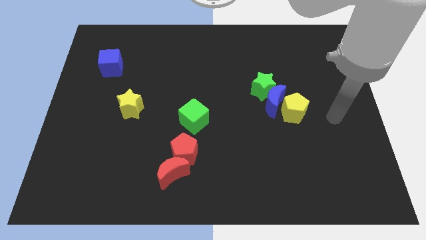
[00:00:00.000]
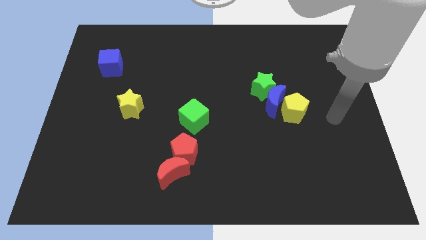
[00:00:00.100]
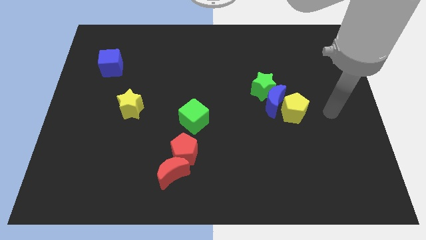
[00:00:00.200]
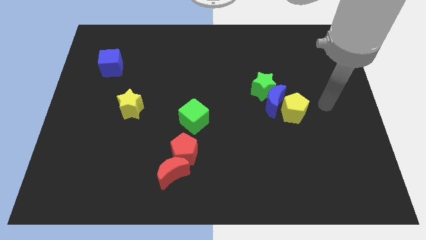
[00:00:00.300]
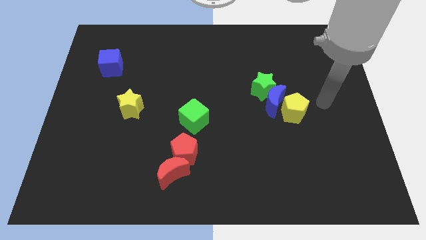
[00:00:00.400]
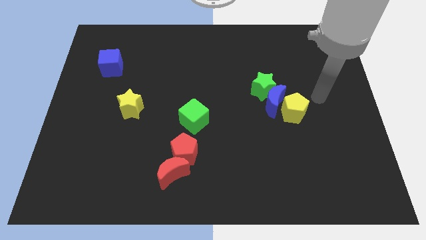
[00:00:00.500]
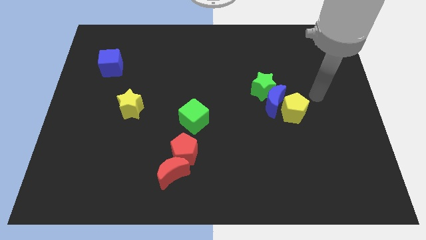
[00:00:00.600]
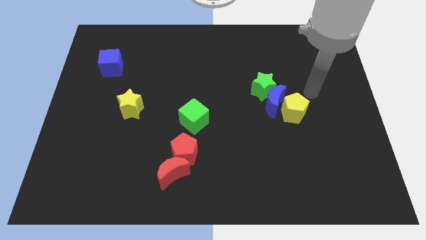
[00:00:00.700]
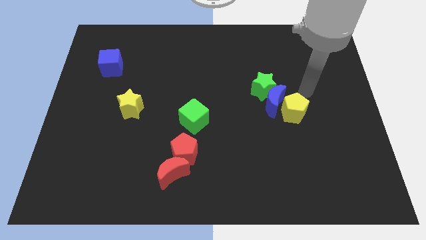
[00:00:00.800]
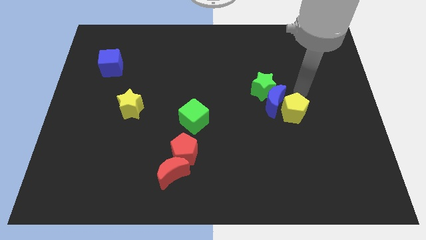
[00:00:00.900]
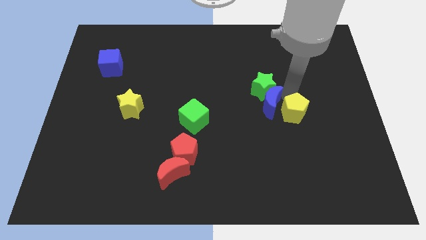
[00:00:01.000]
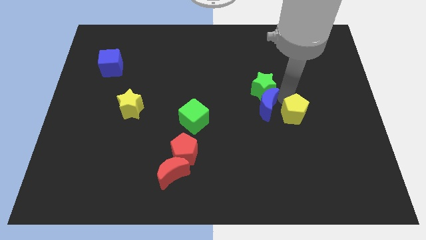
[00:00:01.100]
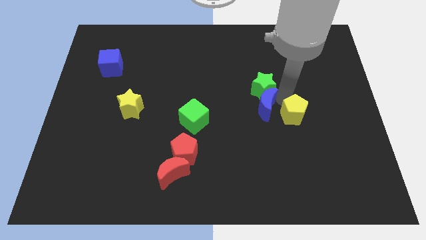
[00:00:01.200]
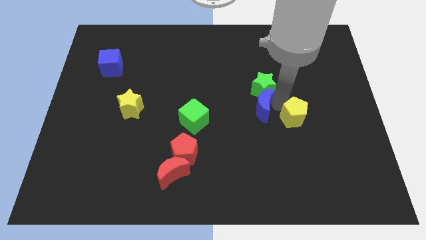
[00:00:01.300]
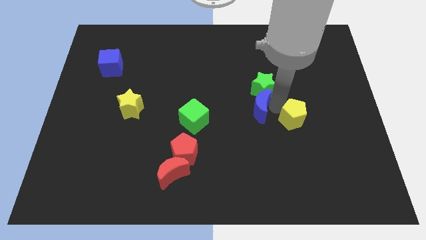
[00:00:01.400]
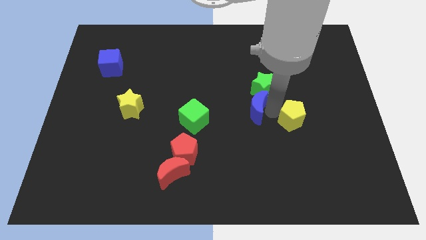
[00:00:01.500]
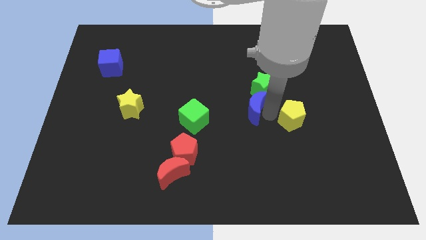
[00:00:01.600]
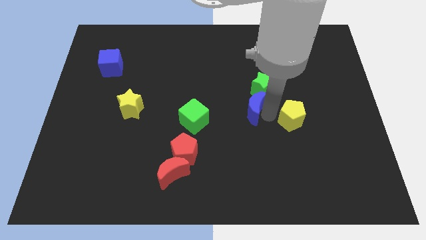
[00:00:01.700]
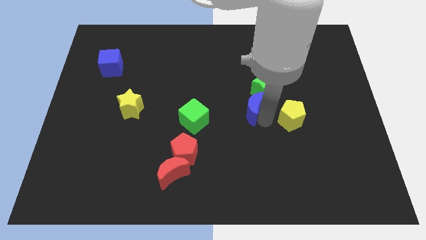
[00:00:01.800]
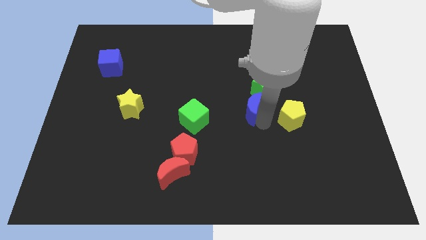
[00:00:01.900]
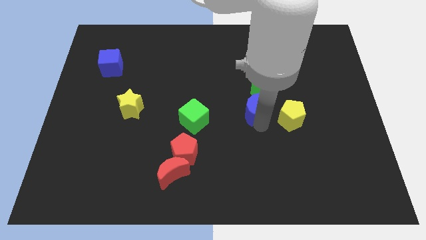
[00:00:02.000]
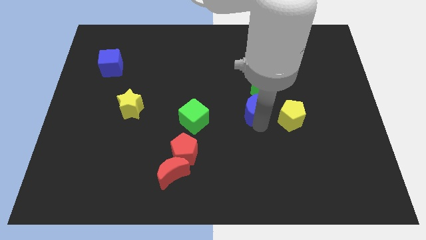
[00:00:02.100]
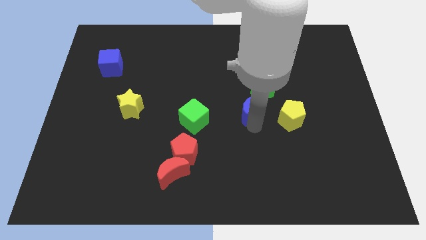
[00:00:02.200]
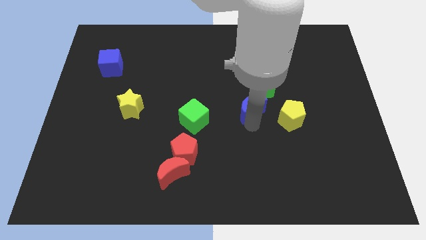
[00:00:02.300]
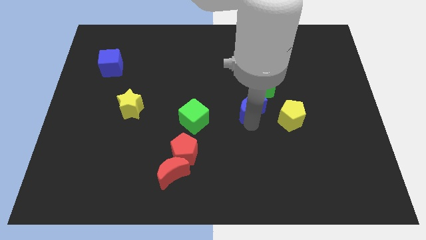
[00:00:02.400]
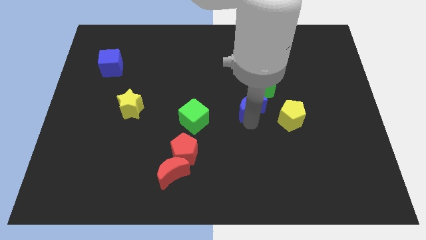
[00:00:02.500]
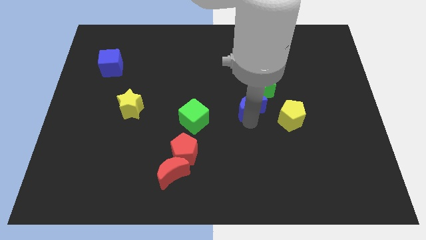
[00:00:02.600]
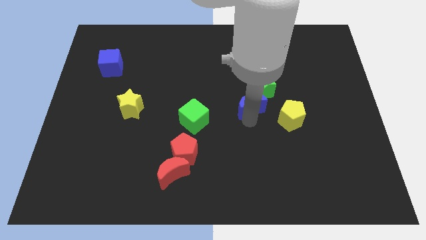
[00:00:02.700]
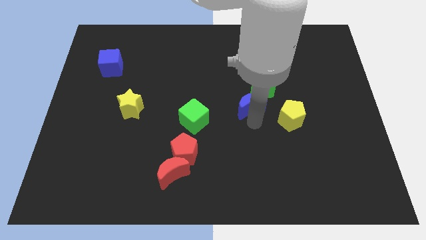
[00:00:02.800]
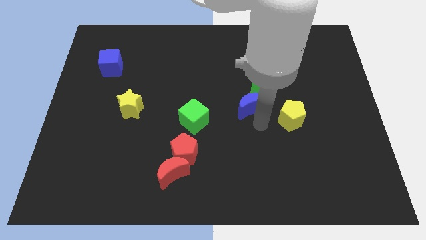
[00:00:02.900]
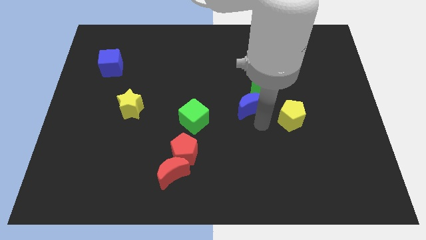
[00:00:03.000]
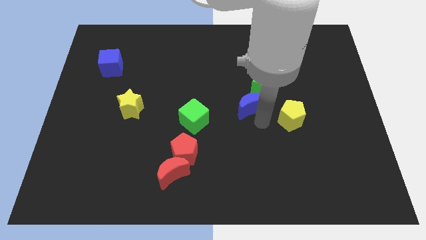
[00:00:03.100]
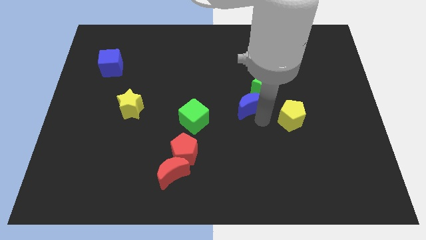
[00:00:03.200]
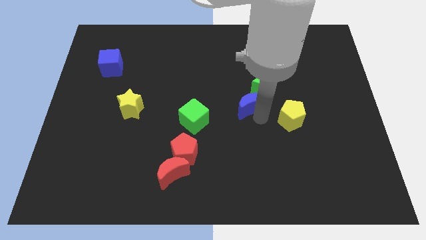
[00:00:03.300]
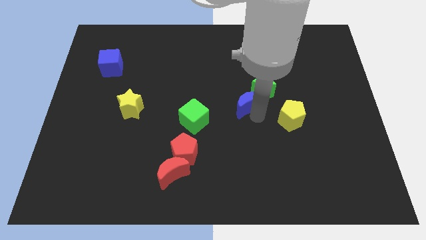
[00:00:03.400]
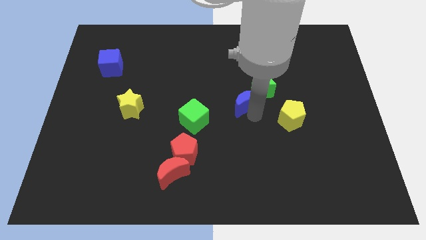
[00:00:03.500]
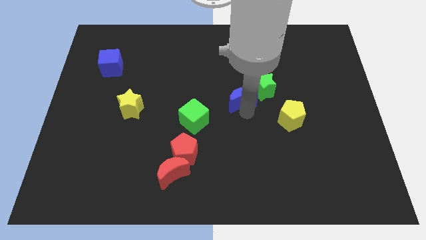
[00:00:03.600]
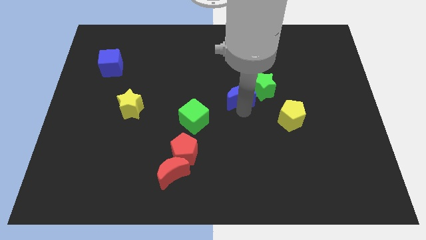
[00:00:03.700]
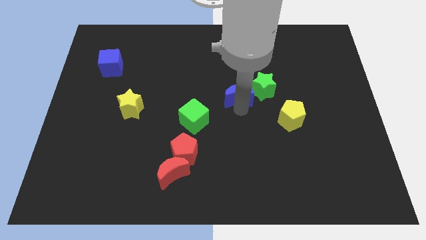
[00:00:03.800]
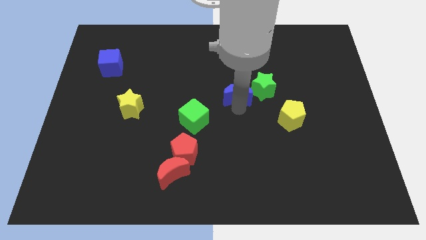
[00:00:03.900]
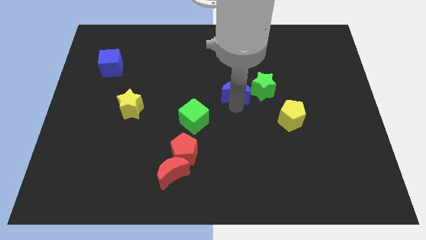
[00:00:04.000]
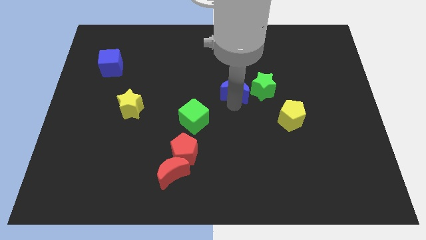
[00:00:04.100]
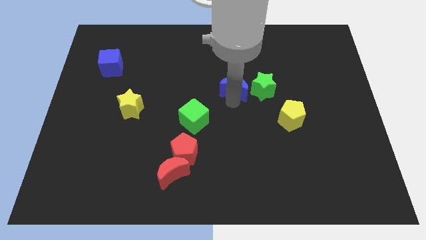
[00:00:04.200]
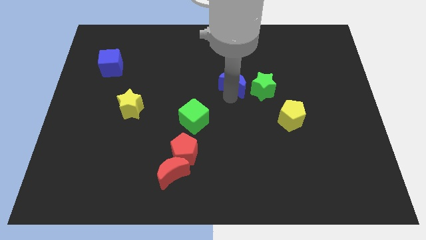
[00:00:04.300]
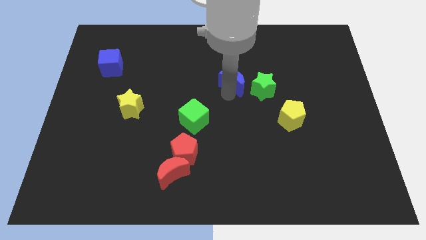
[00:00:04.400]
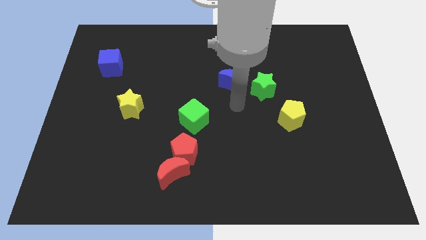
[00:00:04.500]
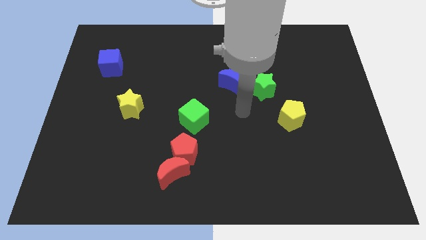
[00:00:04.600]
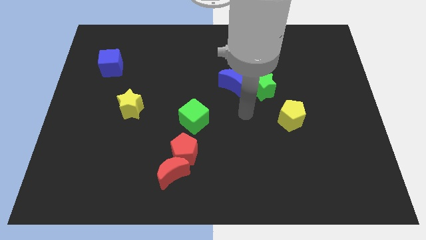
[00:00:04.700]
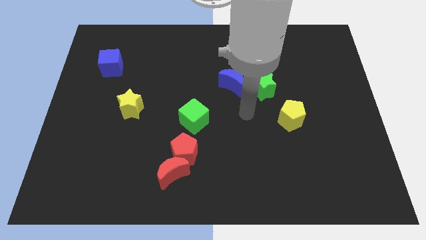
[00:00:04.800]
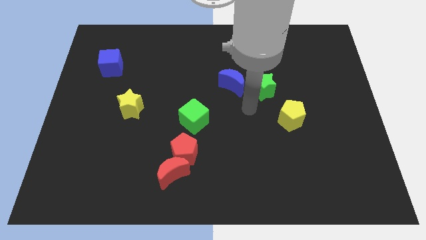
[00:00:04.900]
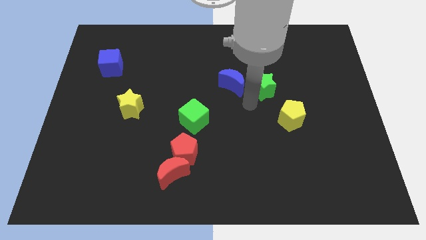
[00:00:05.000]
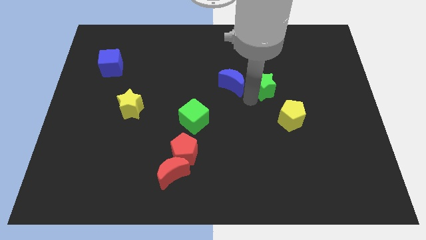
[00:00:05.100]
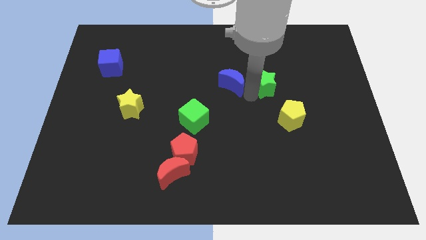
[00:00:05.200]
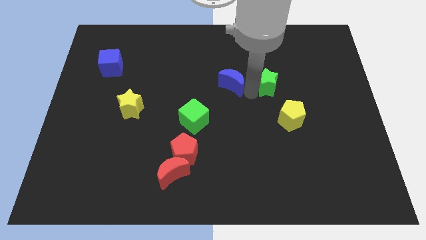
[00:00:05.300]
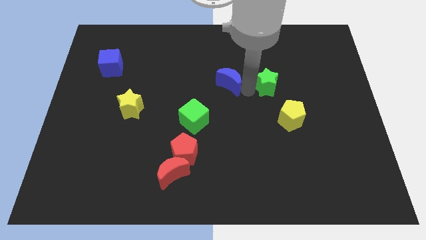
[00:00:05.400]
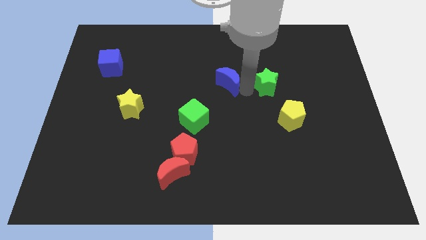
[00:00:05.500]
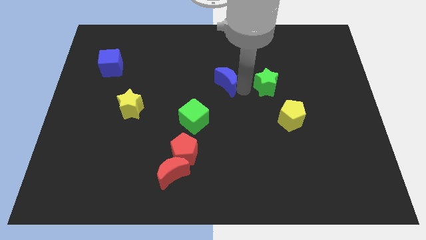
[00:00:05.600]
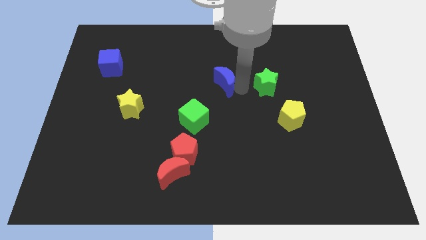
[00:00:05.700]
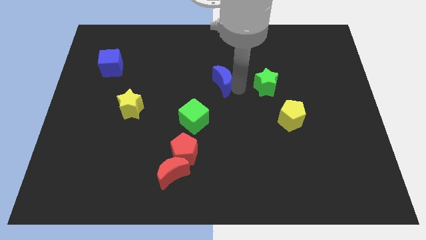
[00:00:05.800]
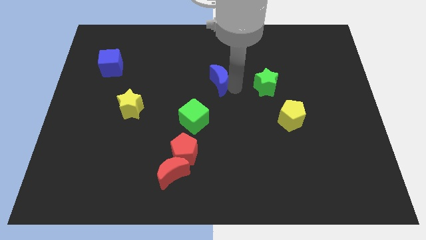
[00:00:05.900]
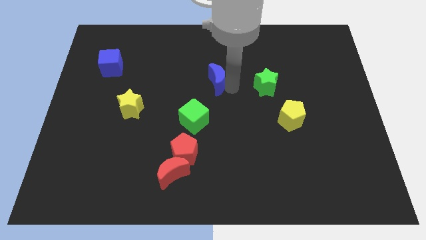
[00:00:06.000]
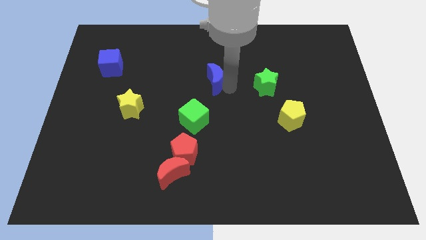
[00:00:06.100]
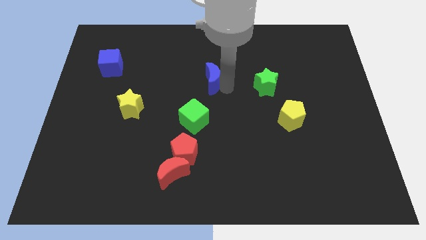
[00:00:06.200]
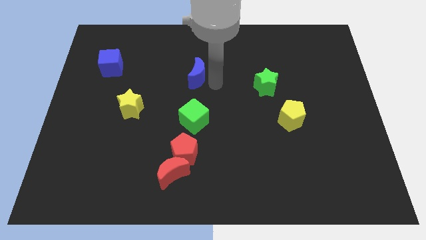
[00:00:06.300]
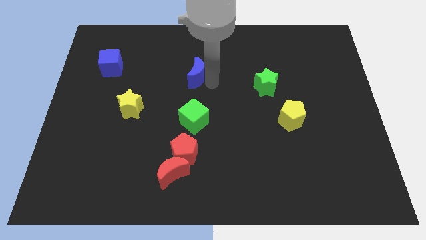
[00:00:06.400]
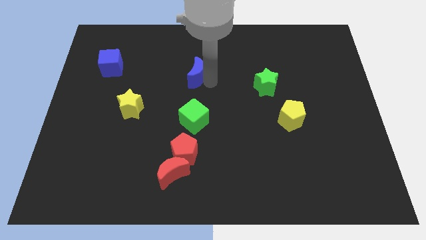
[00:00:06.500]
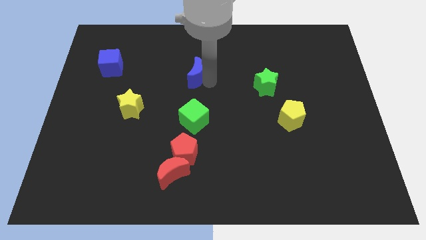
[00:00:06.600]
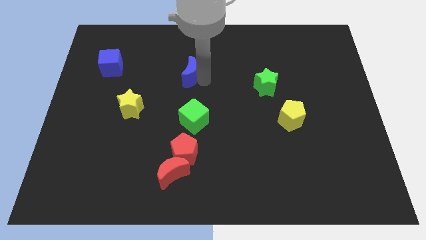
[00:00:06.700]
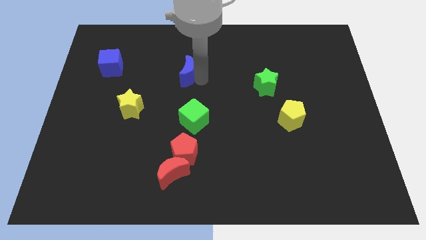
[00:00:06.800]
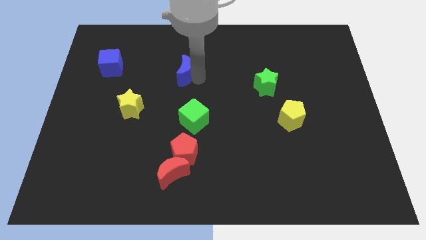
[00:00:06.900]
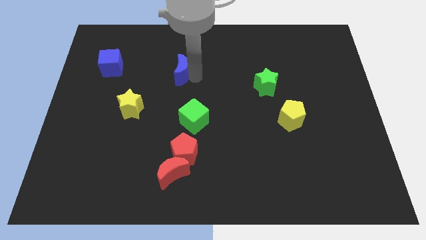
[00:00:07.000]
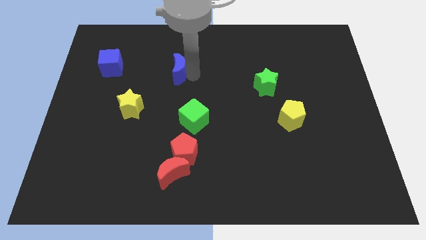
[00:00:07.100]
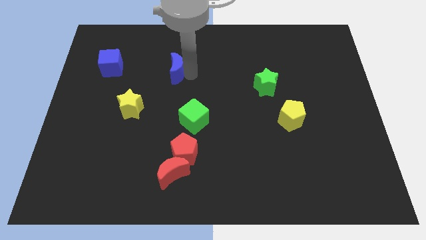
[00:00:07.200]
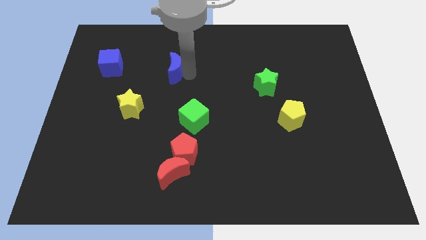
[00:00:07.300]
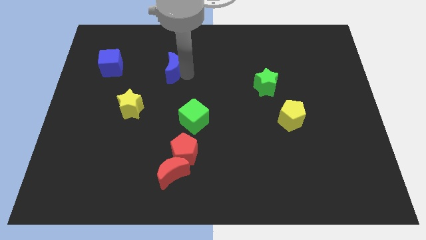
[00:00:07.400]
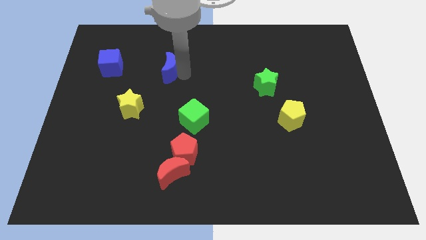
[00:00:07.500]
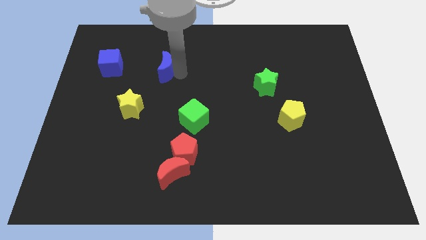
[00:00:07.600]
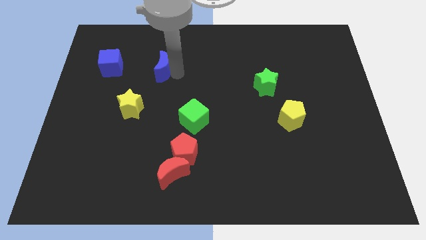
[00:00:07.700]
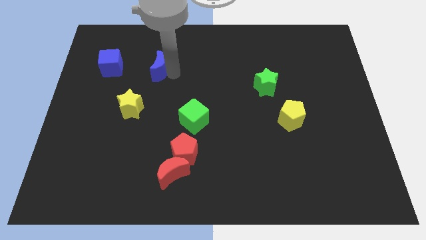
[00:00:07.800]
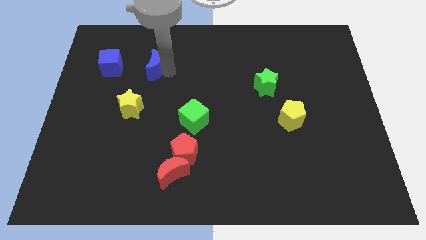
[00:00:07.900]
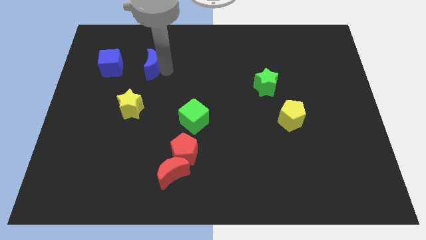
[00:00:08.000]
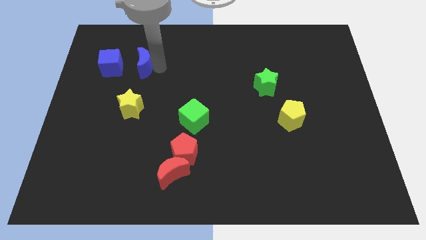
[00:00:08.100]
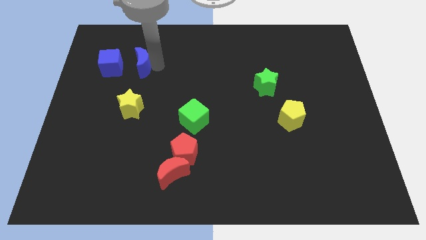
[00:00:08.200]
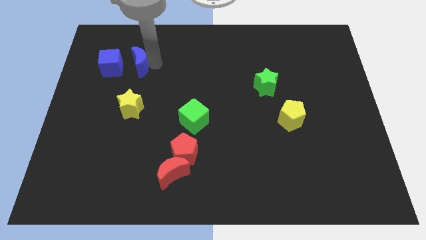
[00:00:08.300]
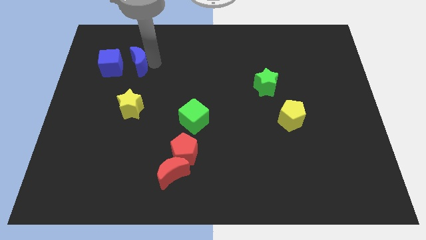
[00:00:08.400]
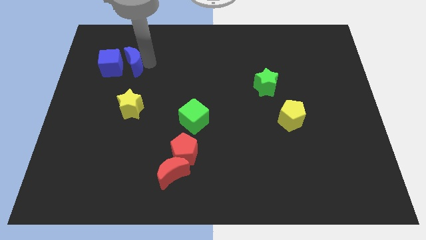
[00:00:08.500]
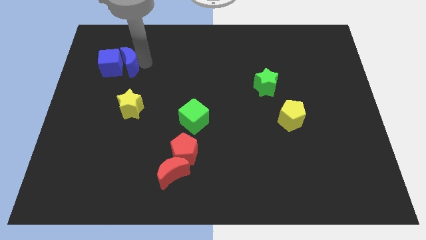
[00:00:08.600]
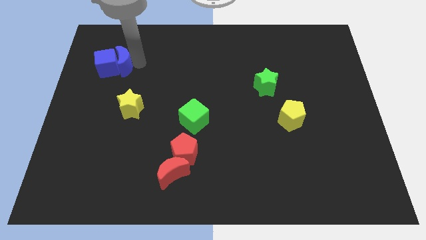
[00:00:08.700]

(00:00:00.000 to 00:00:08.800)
move the blue moon close to the blue cube
